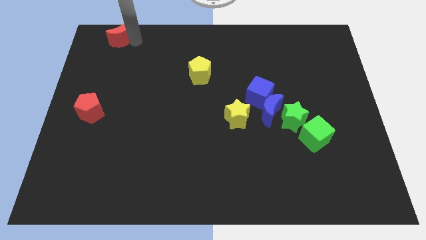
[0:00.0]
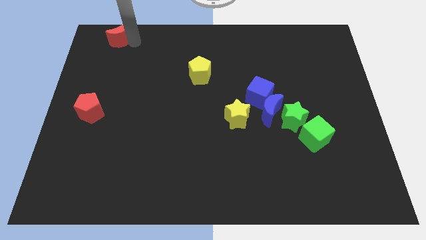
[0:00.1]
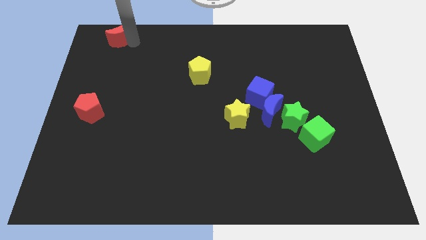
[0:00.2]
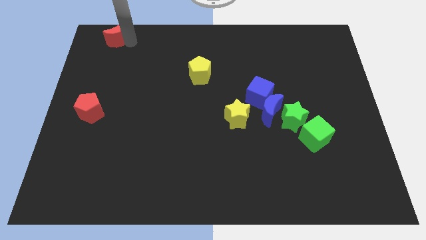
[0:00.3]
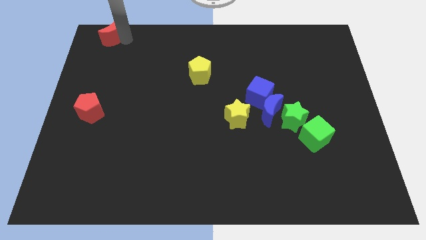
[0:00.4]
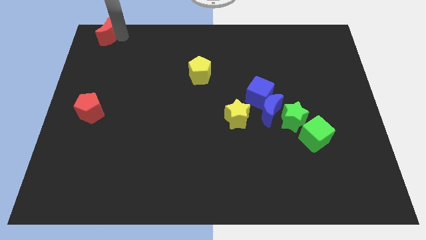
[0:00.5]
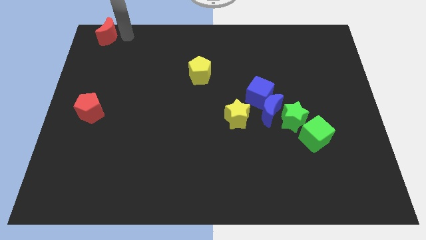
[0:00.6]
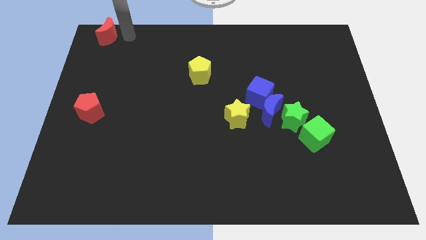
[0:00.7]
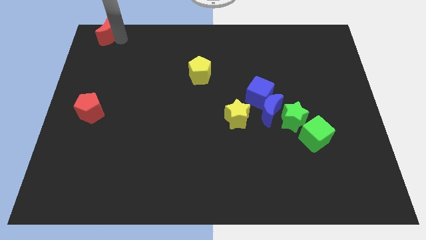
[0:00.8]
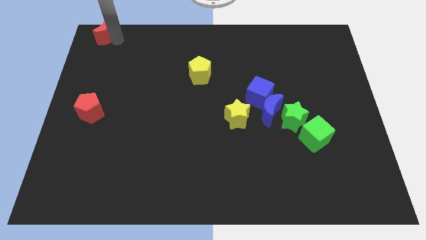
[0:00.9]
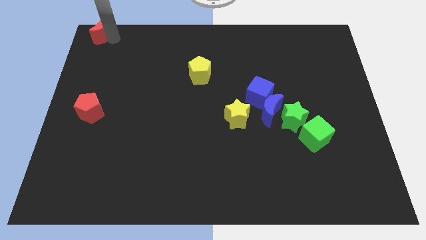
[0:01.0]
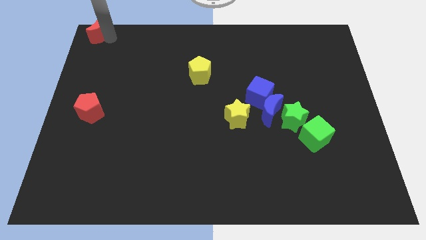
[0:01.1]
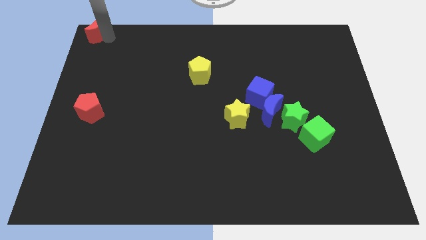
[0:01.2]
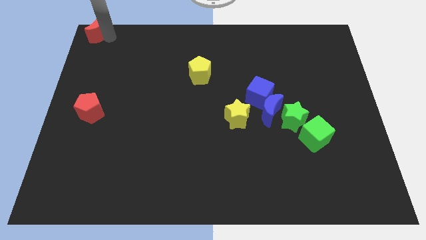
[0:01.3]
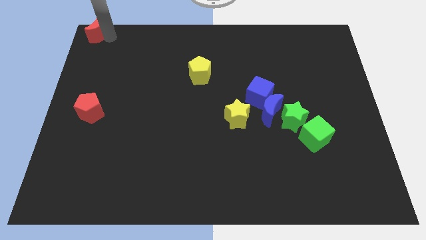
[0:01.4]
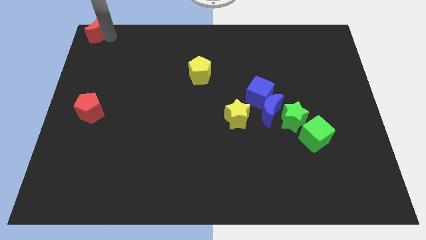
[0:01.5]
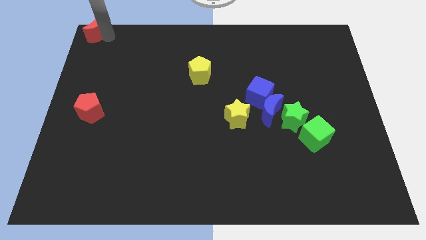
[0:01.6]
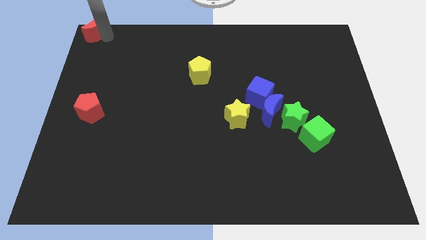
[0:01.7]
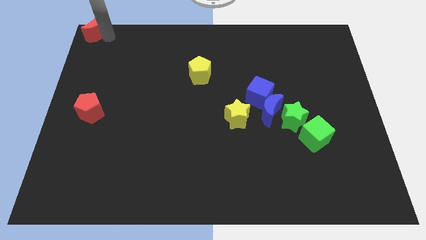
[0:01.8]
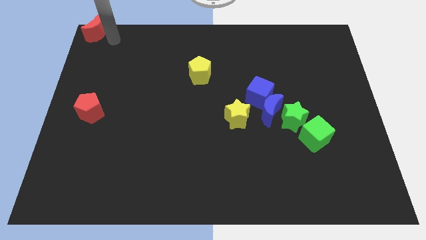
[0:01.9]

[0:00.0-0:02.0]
push the red moon to the top left of the board

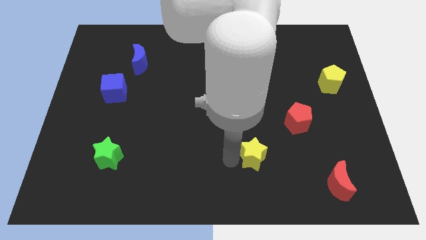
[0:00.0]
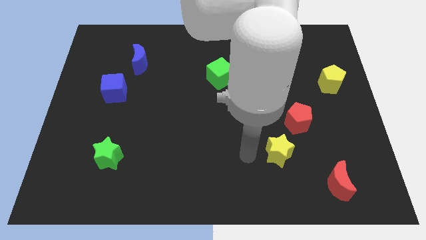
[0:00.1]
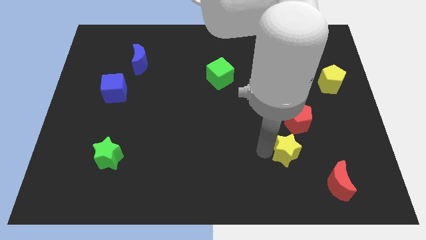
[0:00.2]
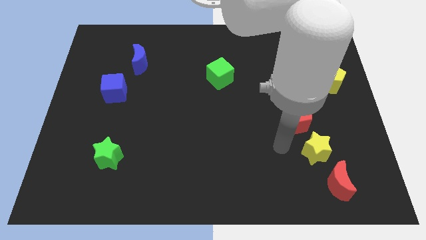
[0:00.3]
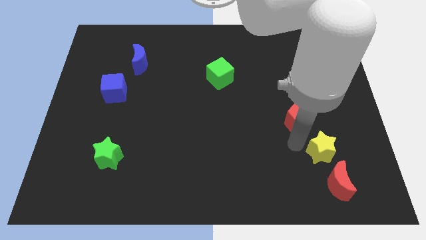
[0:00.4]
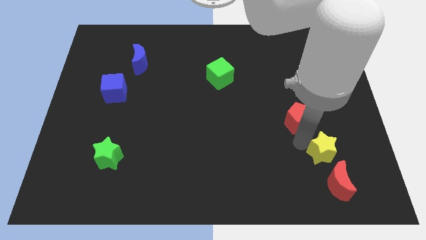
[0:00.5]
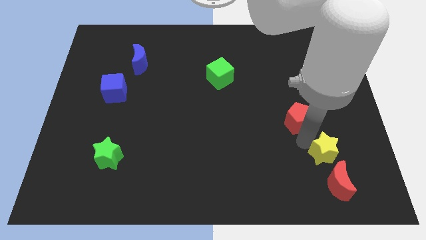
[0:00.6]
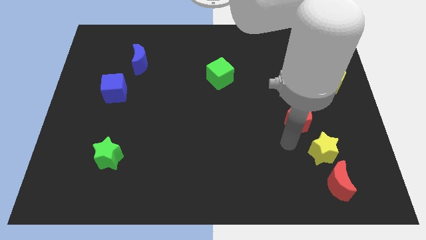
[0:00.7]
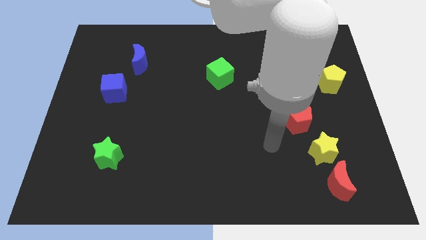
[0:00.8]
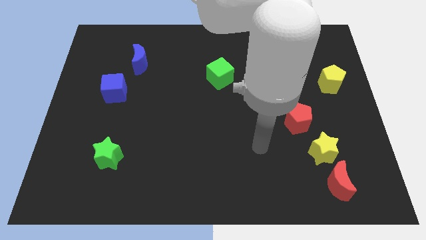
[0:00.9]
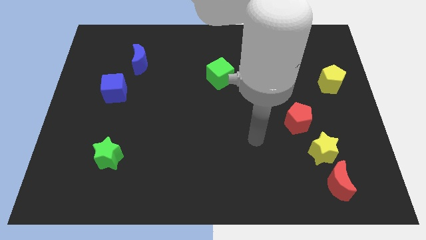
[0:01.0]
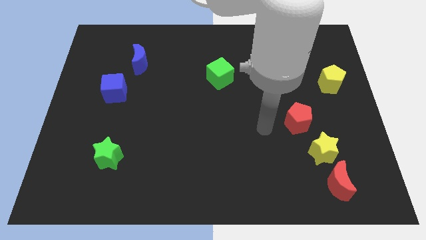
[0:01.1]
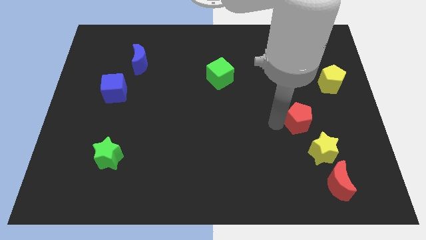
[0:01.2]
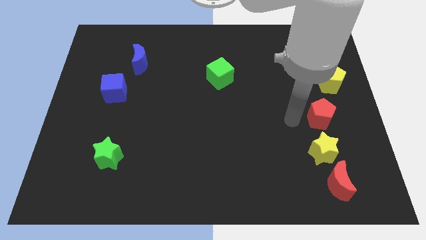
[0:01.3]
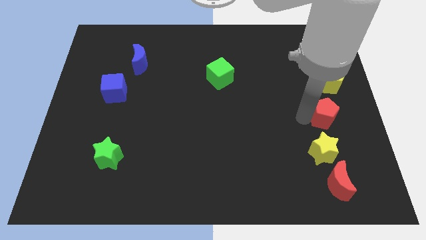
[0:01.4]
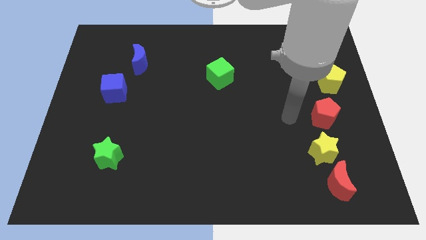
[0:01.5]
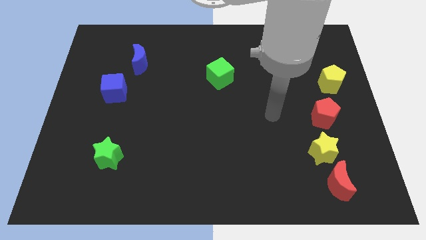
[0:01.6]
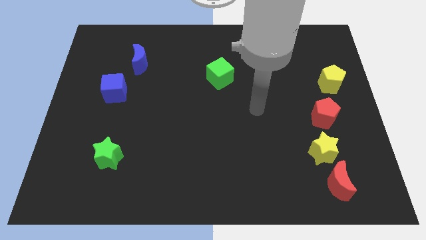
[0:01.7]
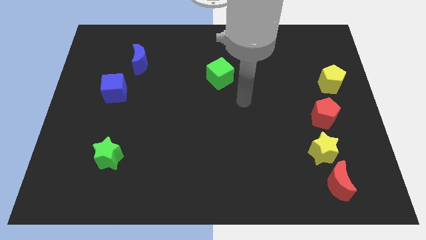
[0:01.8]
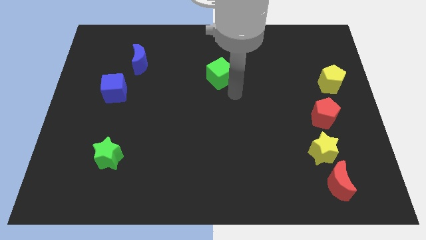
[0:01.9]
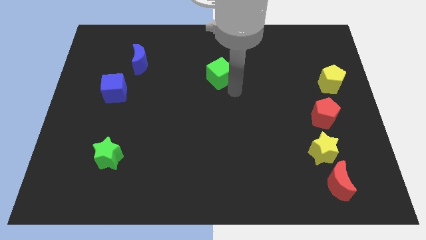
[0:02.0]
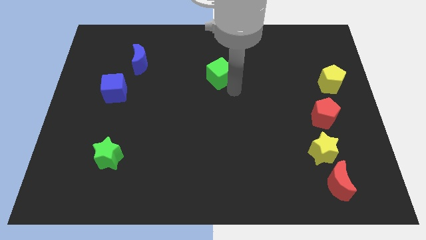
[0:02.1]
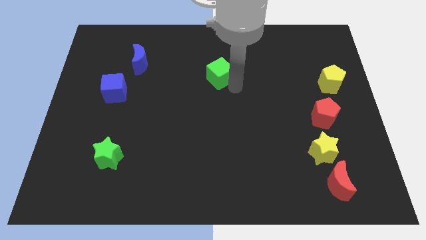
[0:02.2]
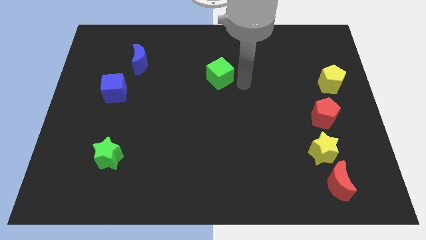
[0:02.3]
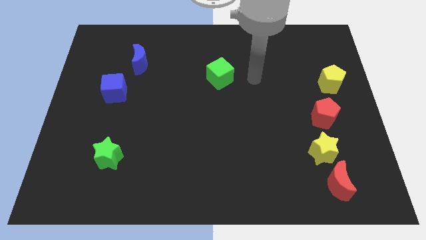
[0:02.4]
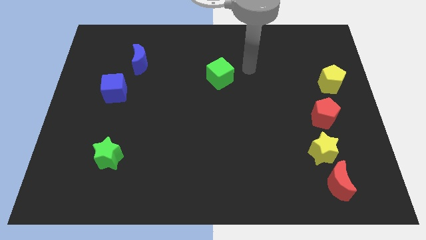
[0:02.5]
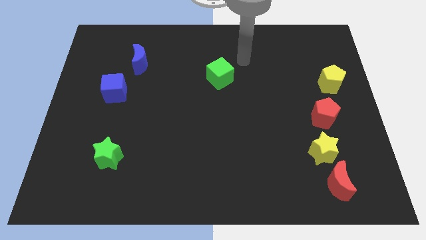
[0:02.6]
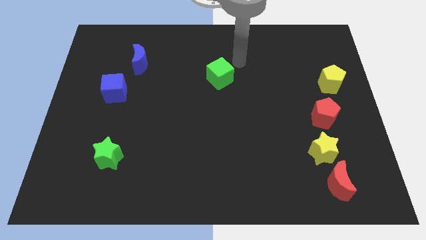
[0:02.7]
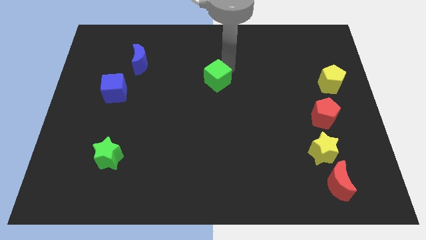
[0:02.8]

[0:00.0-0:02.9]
place the red pentagon above the yellow star

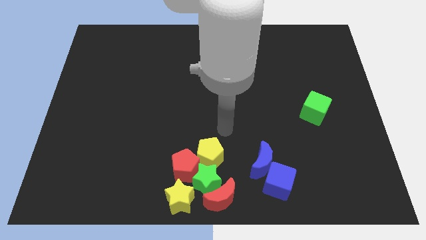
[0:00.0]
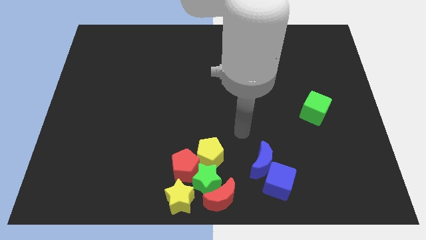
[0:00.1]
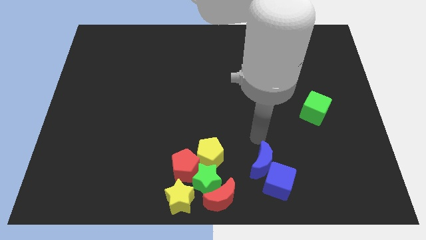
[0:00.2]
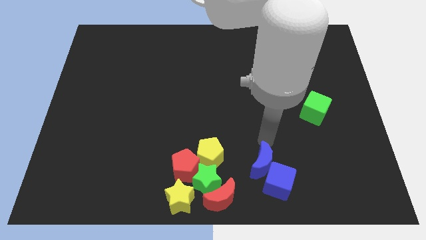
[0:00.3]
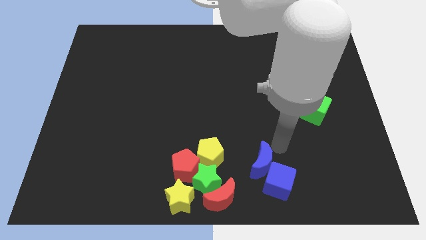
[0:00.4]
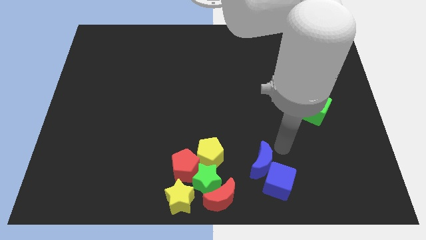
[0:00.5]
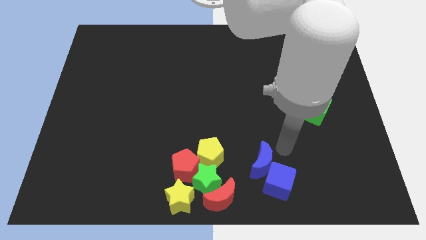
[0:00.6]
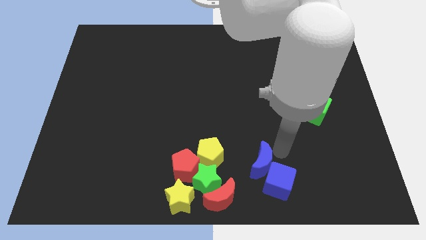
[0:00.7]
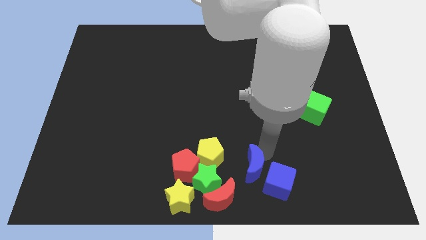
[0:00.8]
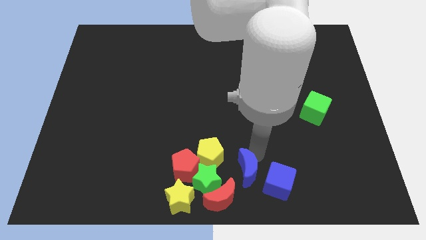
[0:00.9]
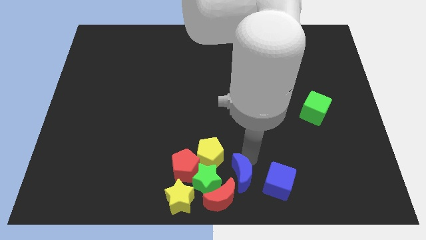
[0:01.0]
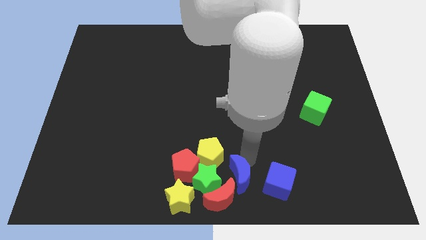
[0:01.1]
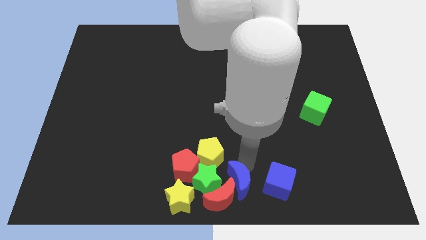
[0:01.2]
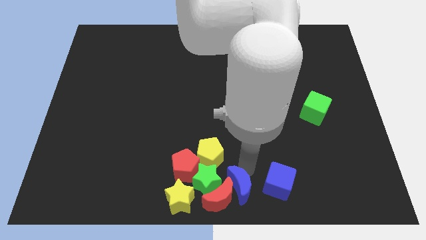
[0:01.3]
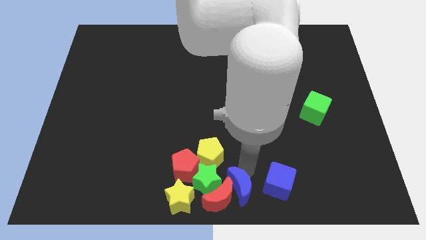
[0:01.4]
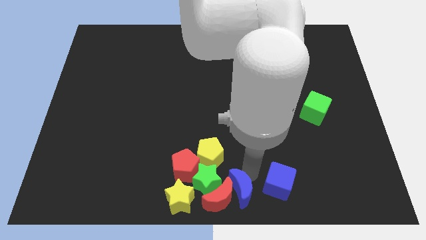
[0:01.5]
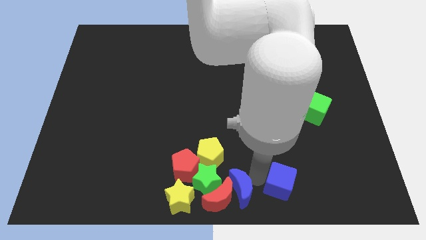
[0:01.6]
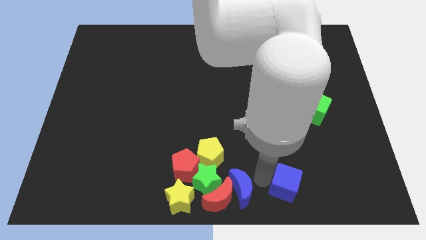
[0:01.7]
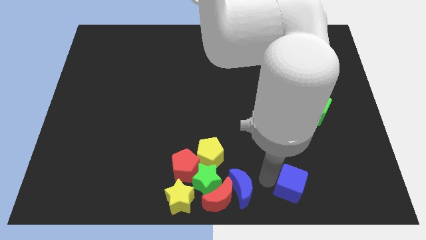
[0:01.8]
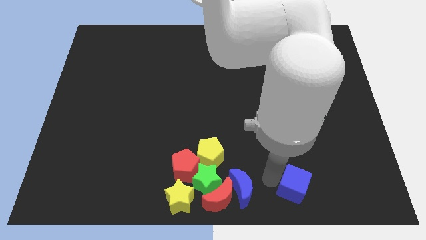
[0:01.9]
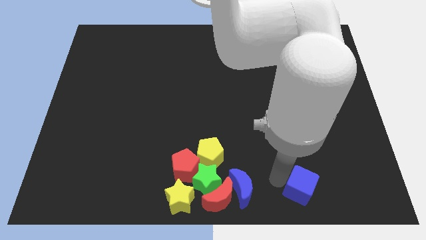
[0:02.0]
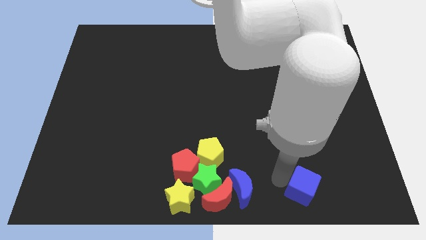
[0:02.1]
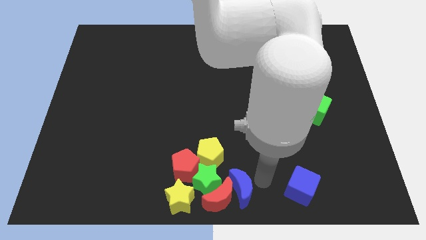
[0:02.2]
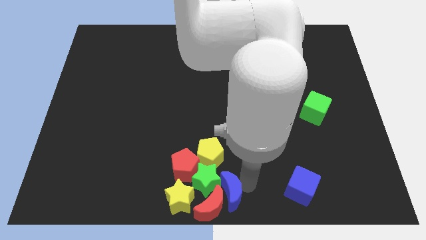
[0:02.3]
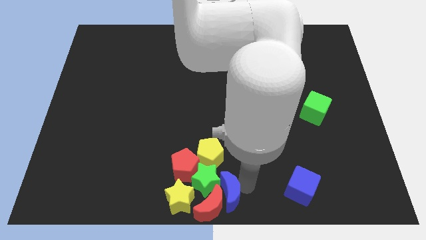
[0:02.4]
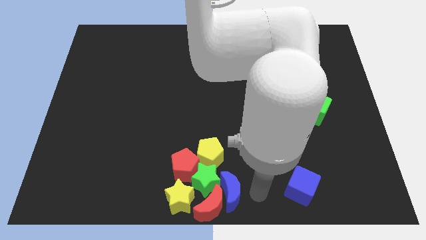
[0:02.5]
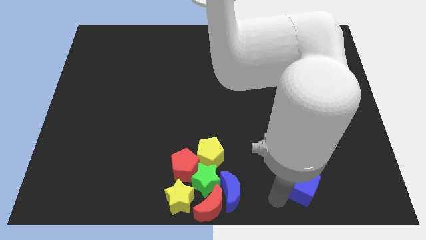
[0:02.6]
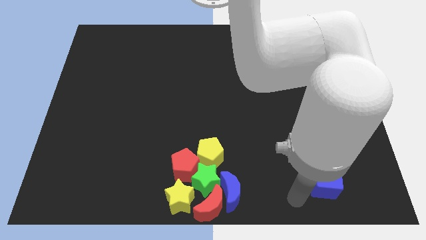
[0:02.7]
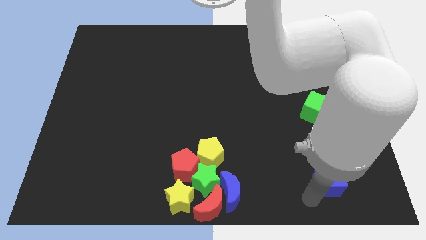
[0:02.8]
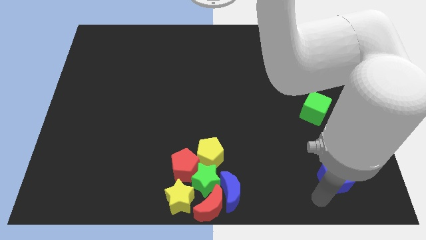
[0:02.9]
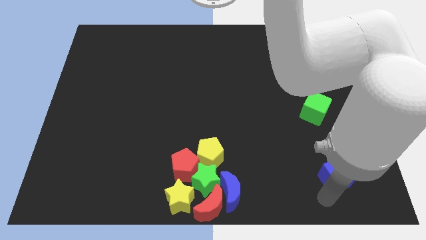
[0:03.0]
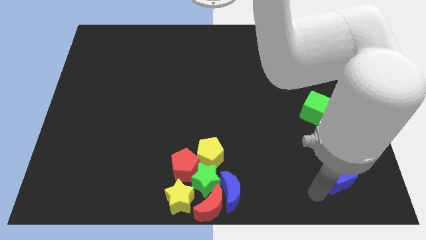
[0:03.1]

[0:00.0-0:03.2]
separate the blue blocks

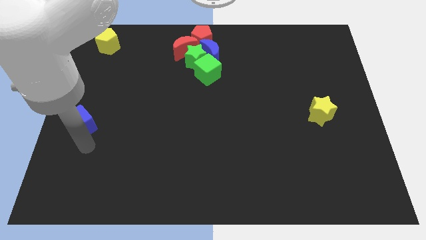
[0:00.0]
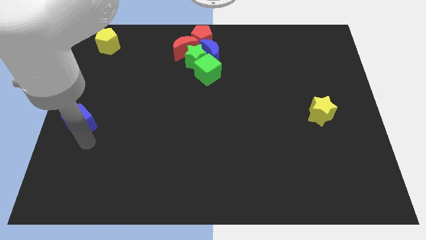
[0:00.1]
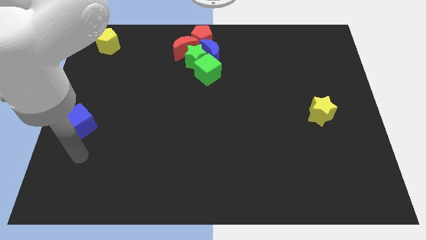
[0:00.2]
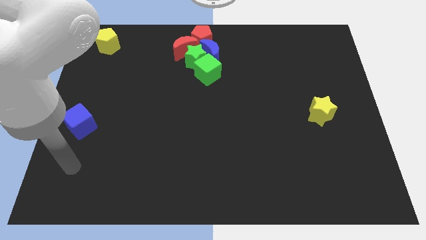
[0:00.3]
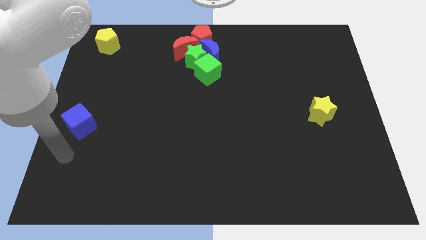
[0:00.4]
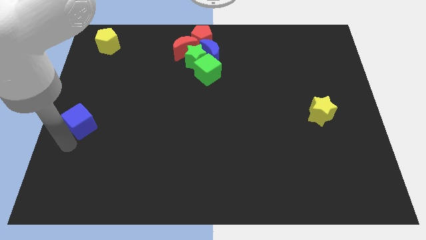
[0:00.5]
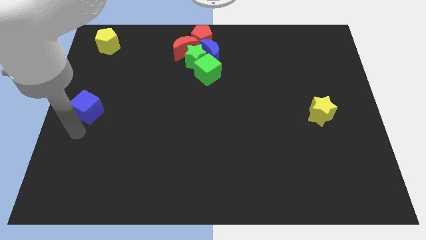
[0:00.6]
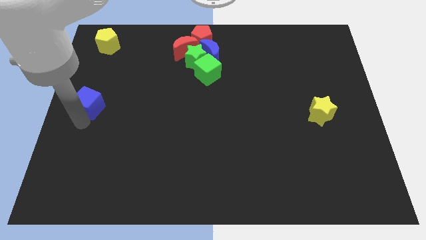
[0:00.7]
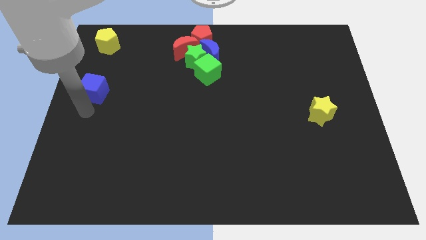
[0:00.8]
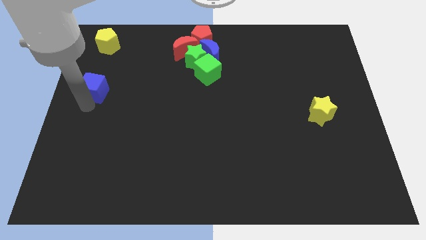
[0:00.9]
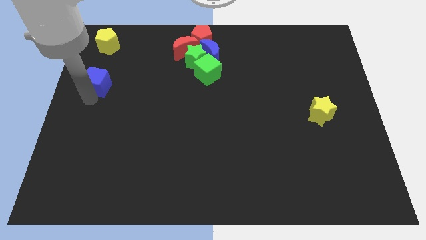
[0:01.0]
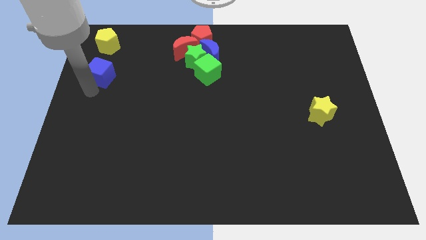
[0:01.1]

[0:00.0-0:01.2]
push the blue cube towards the yellow pentagon
